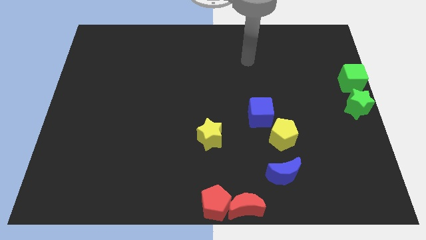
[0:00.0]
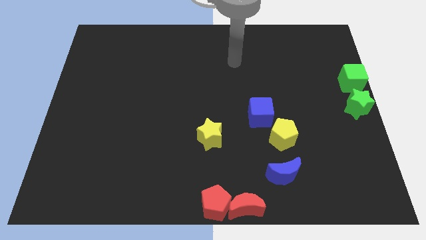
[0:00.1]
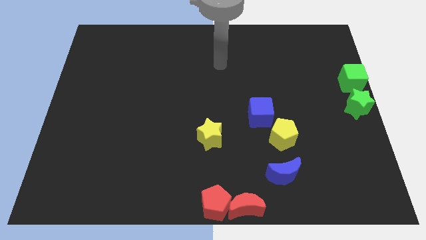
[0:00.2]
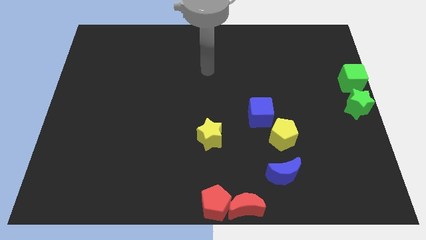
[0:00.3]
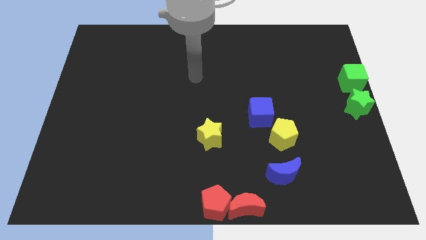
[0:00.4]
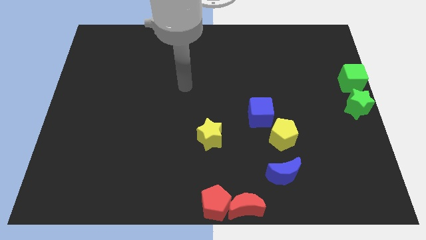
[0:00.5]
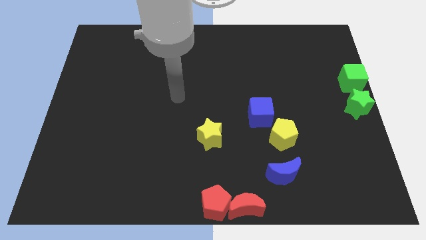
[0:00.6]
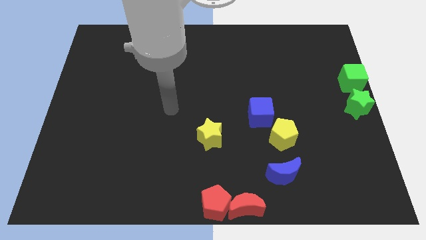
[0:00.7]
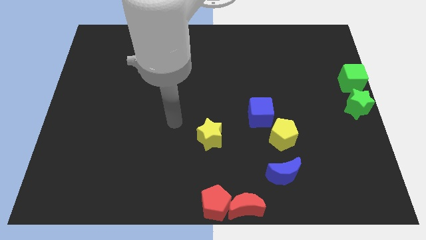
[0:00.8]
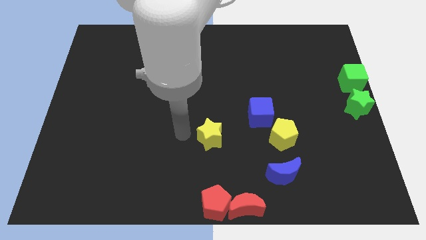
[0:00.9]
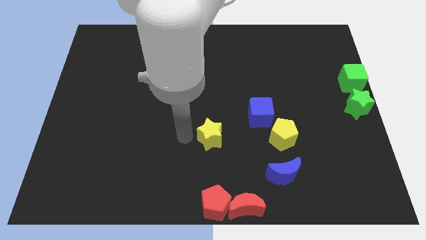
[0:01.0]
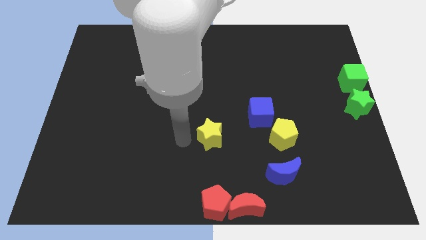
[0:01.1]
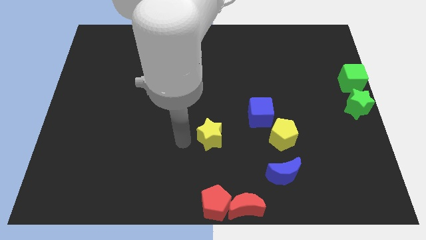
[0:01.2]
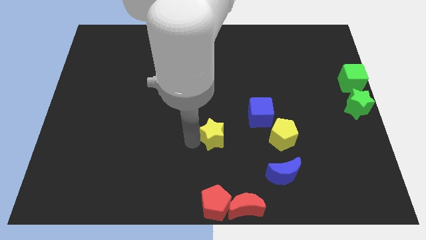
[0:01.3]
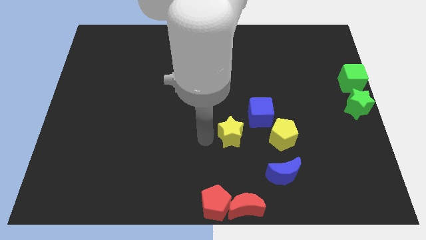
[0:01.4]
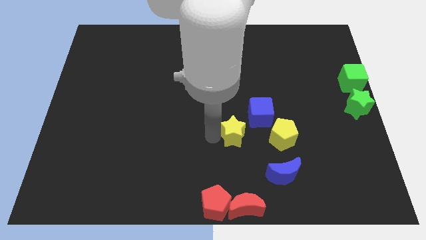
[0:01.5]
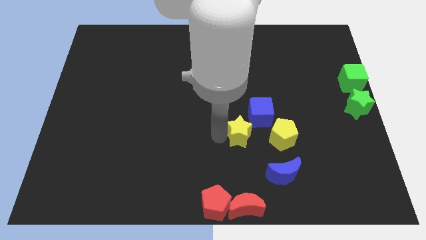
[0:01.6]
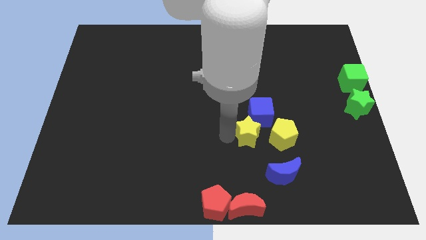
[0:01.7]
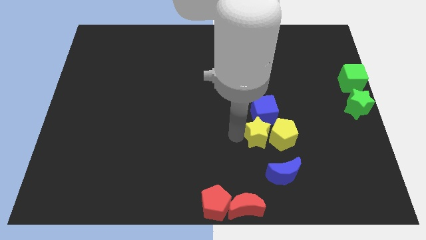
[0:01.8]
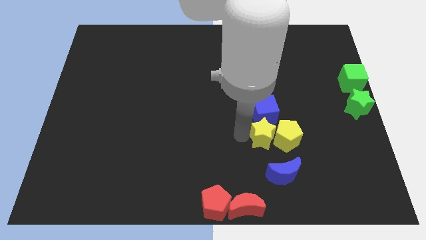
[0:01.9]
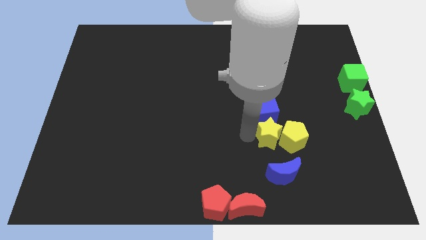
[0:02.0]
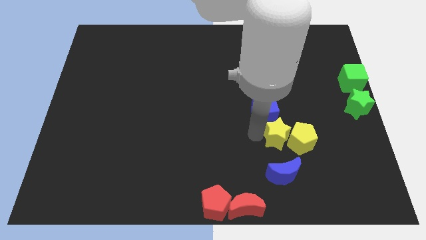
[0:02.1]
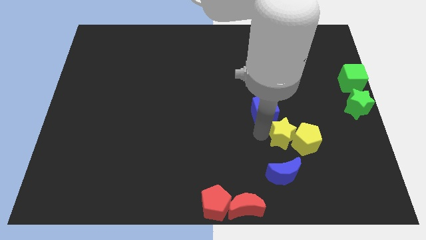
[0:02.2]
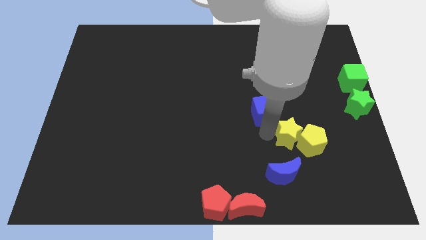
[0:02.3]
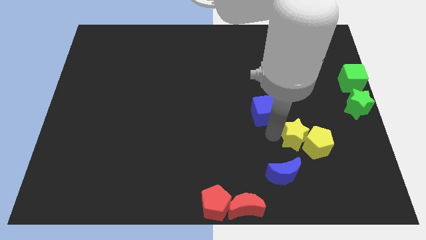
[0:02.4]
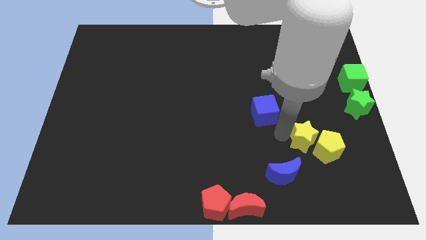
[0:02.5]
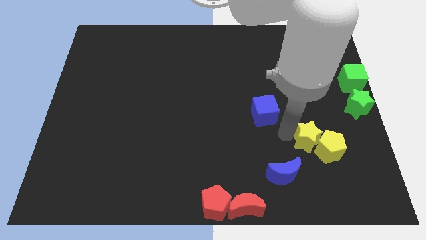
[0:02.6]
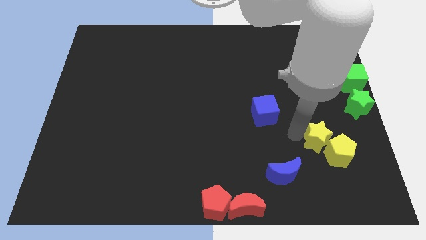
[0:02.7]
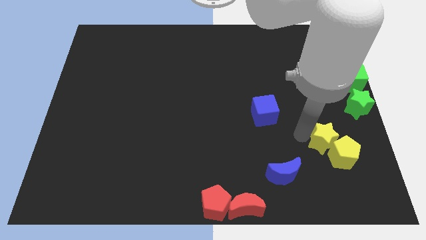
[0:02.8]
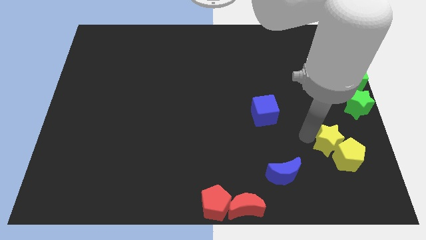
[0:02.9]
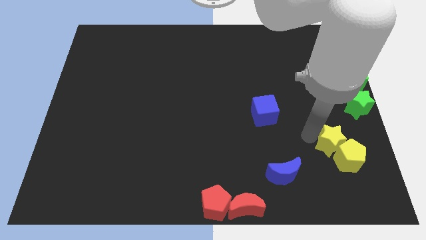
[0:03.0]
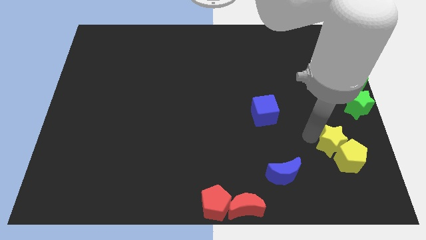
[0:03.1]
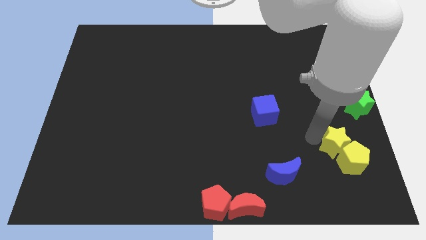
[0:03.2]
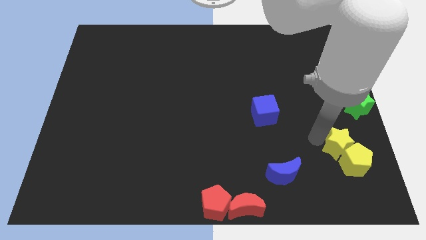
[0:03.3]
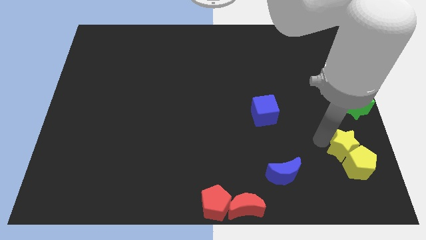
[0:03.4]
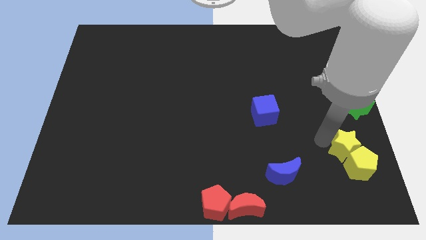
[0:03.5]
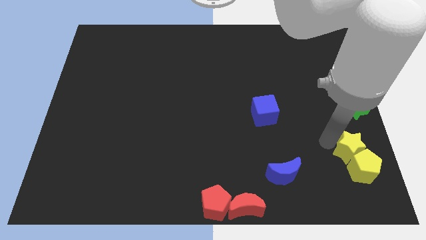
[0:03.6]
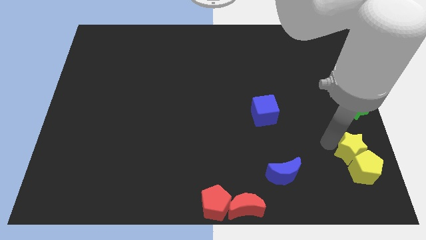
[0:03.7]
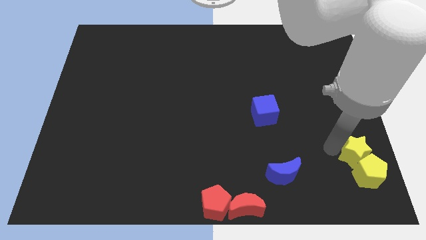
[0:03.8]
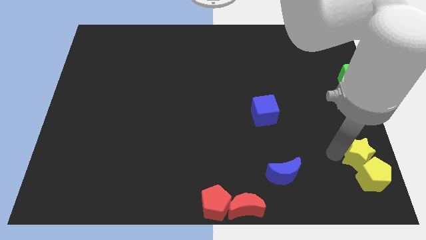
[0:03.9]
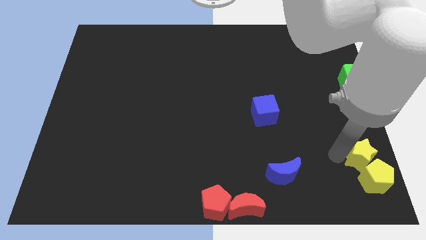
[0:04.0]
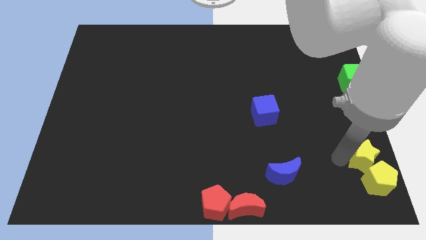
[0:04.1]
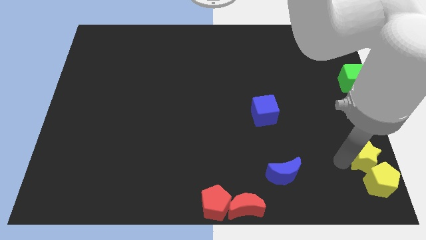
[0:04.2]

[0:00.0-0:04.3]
push the yellow star into the yellow pentagon

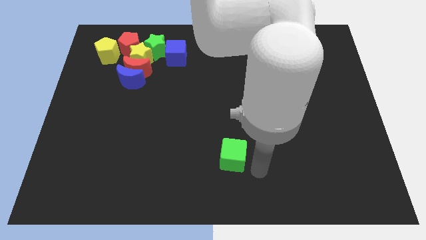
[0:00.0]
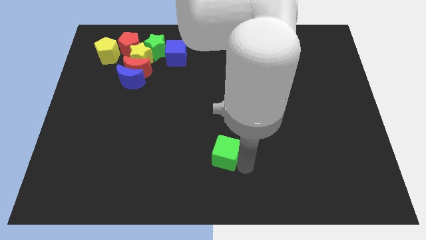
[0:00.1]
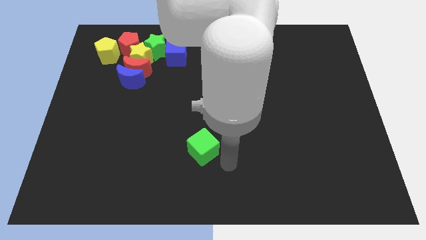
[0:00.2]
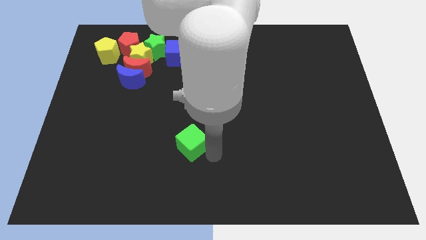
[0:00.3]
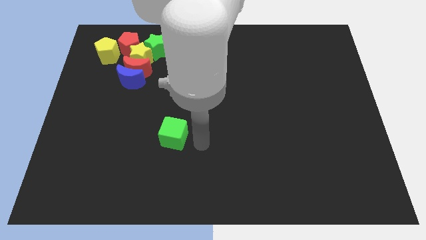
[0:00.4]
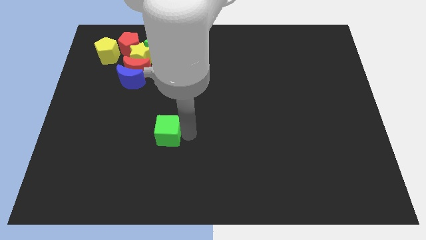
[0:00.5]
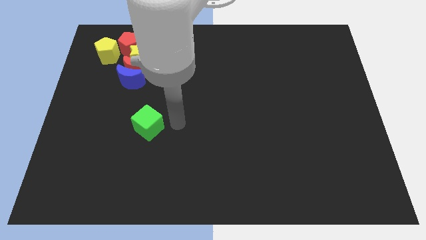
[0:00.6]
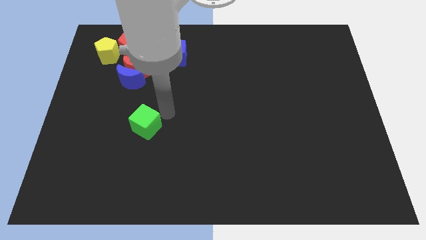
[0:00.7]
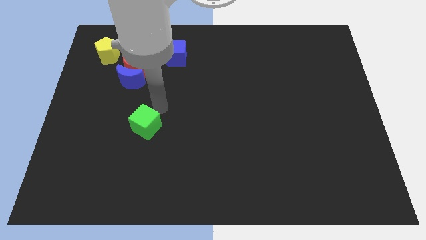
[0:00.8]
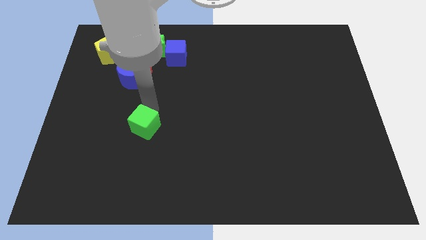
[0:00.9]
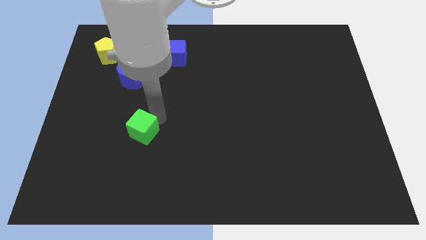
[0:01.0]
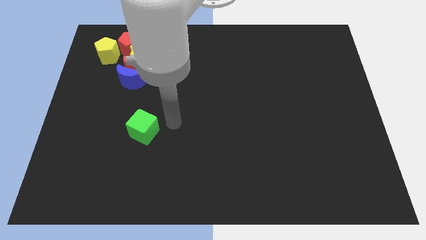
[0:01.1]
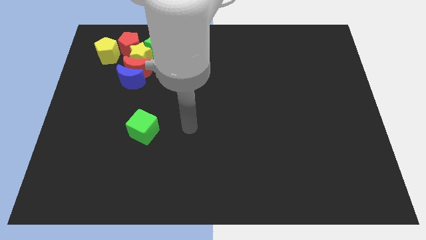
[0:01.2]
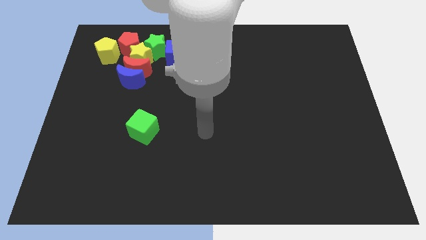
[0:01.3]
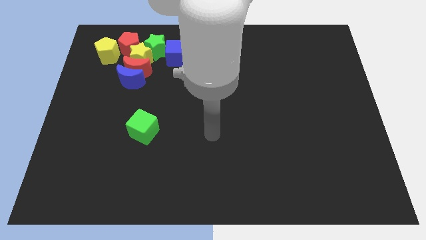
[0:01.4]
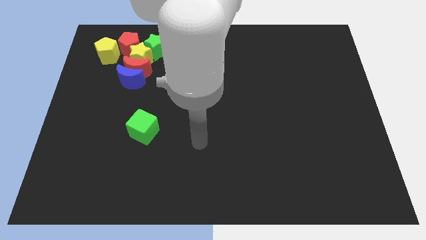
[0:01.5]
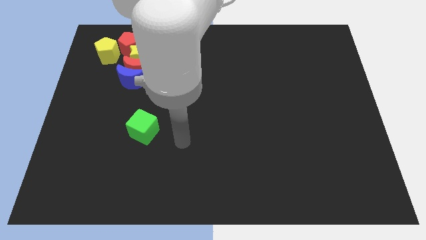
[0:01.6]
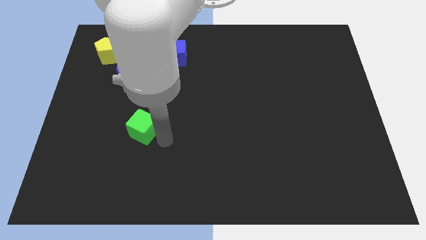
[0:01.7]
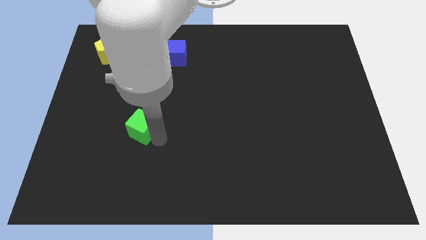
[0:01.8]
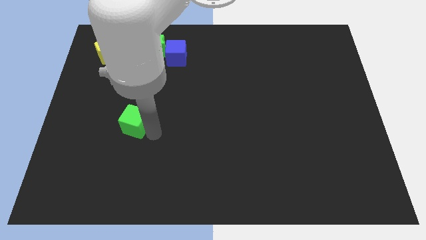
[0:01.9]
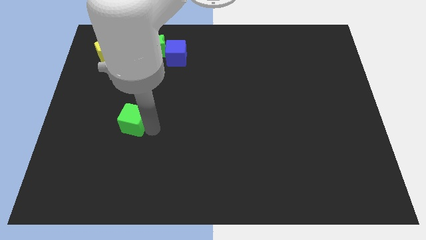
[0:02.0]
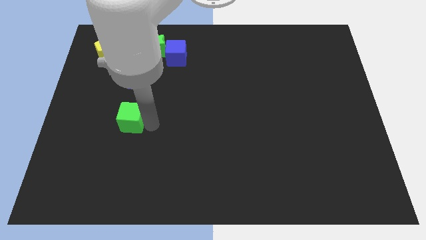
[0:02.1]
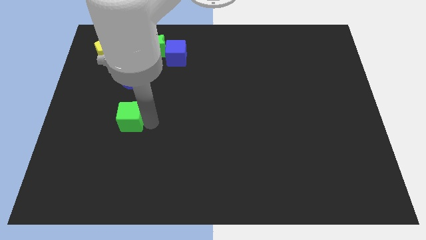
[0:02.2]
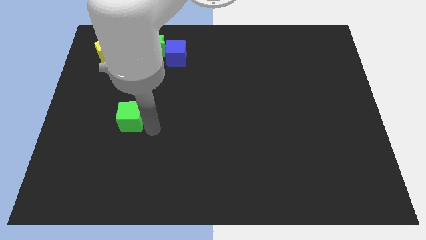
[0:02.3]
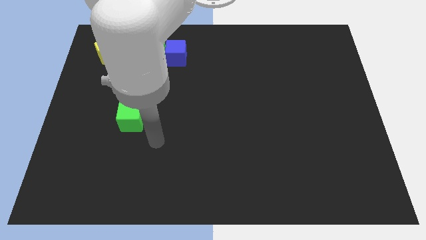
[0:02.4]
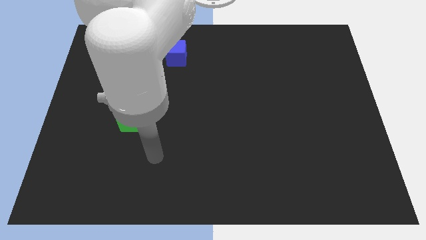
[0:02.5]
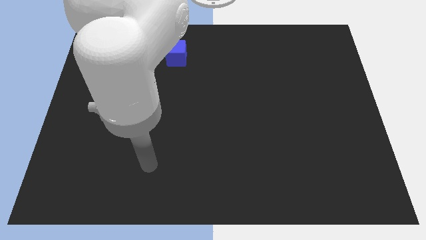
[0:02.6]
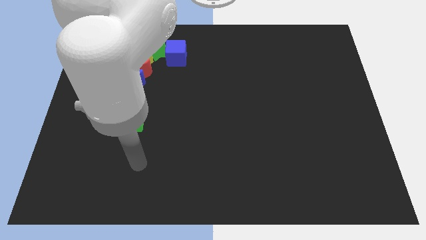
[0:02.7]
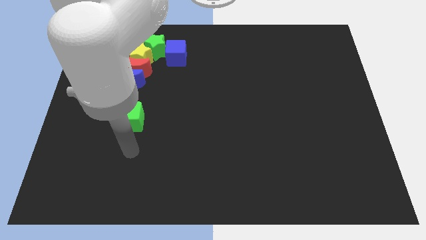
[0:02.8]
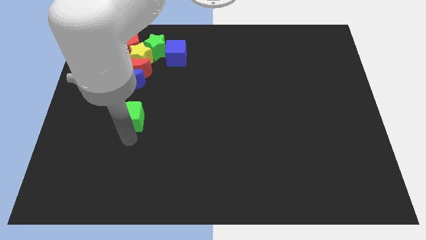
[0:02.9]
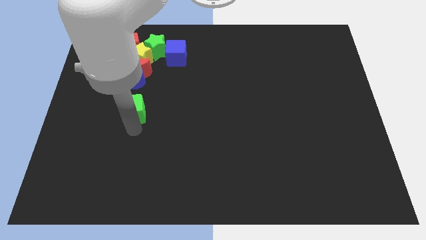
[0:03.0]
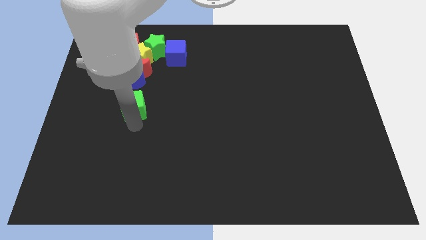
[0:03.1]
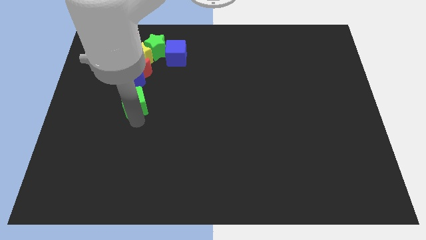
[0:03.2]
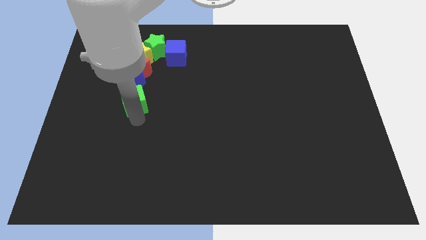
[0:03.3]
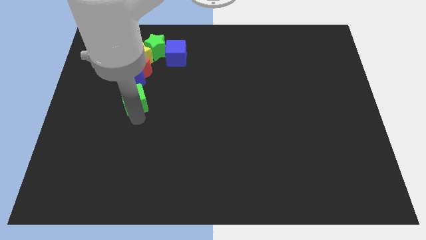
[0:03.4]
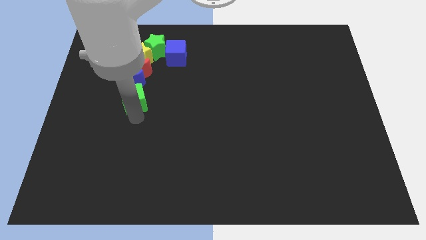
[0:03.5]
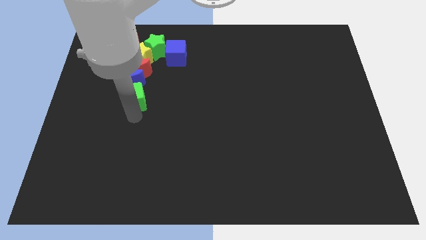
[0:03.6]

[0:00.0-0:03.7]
place the green cube below the blue crescent

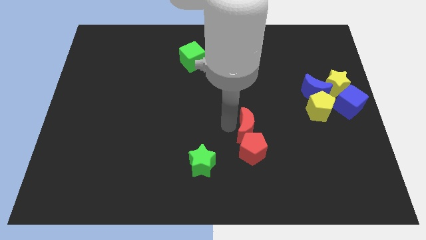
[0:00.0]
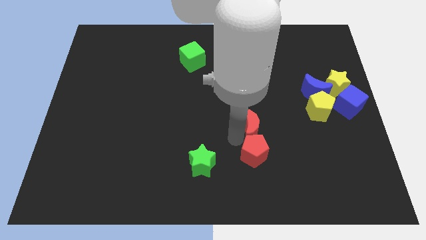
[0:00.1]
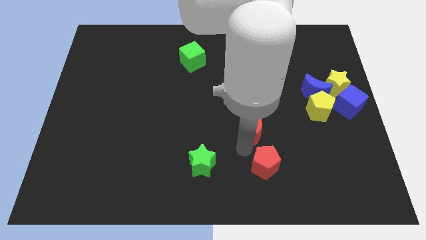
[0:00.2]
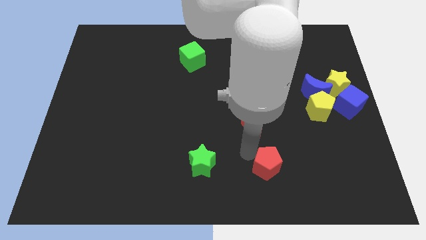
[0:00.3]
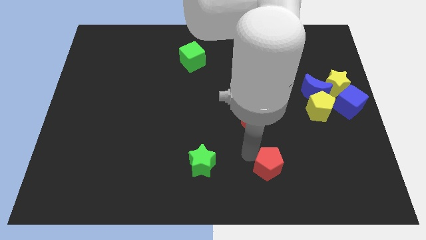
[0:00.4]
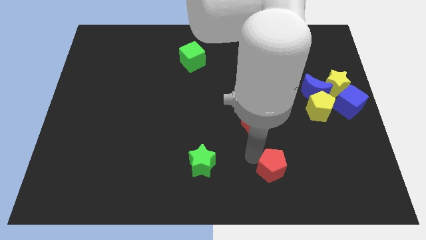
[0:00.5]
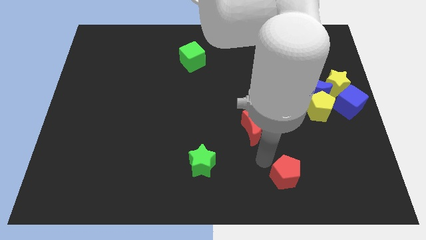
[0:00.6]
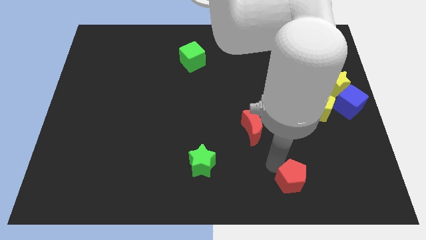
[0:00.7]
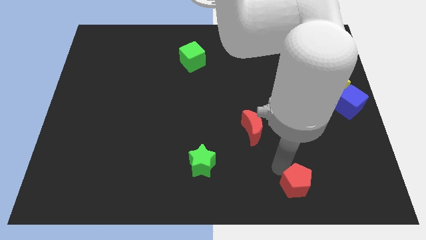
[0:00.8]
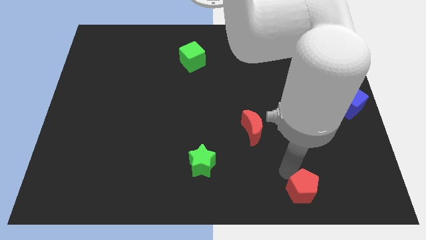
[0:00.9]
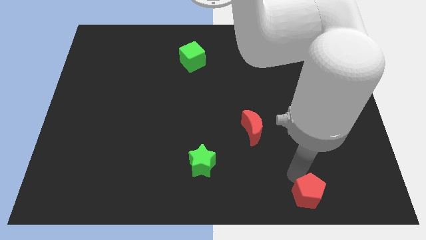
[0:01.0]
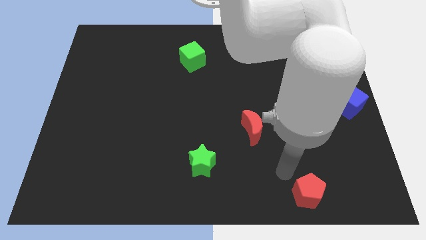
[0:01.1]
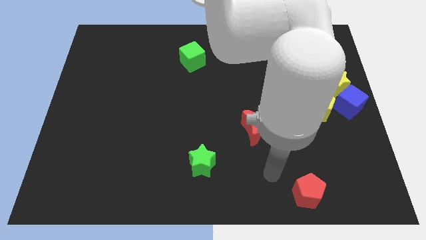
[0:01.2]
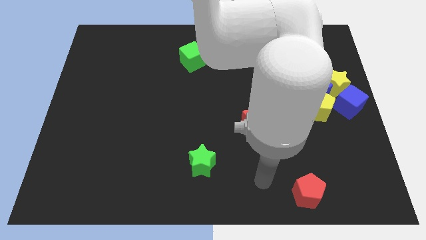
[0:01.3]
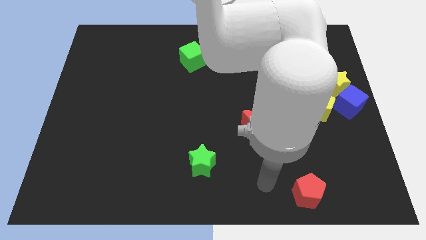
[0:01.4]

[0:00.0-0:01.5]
separate the red pentagon from the red crescent
